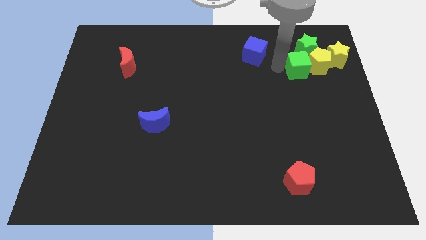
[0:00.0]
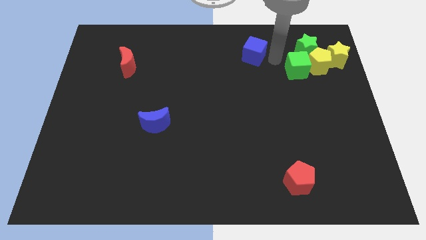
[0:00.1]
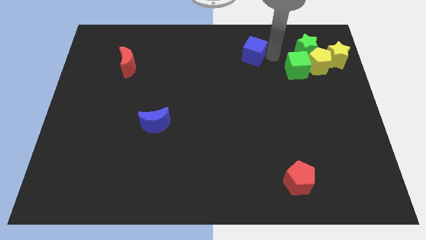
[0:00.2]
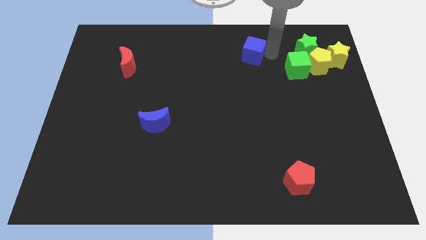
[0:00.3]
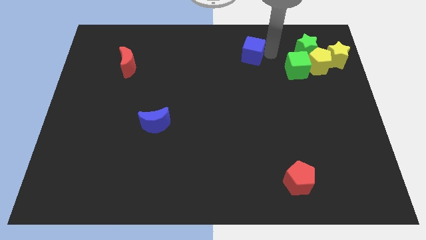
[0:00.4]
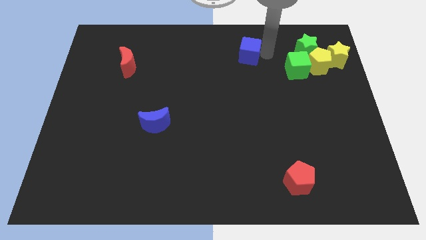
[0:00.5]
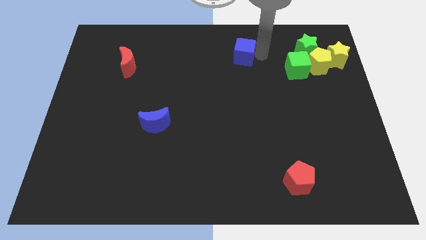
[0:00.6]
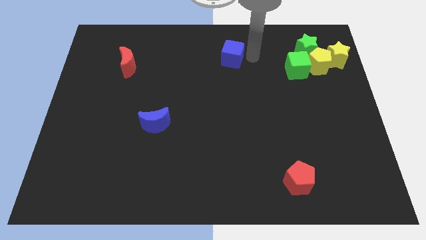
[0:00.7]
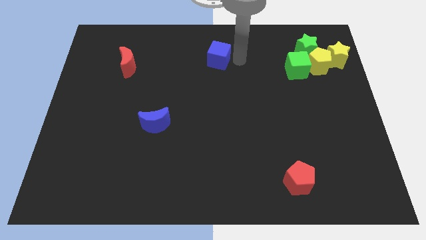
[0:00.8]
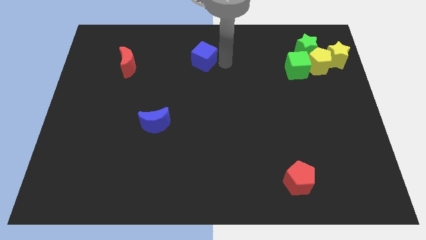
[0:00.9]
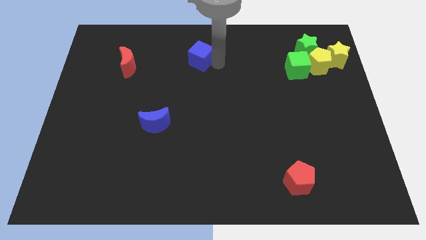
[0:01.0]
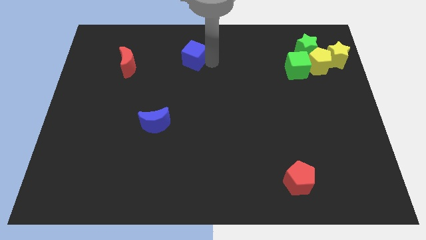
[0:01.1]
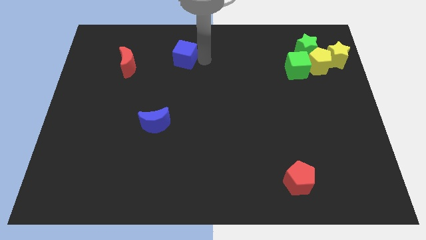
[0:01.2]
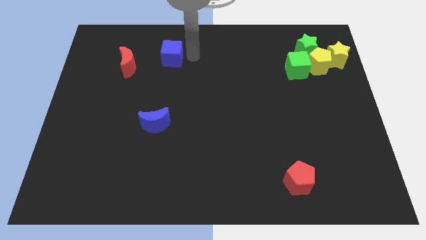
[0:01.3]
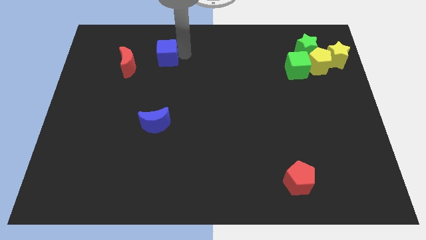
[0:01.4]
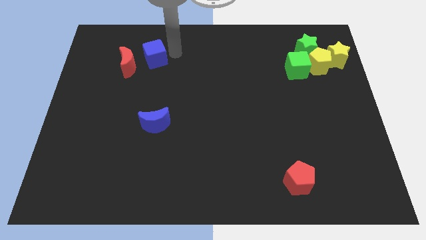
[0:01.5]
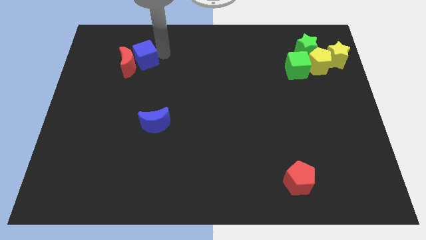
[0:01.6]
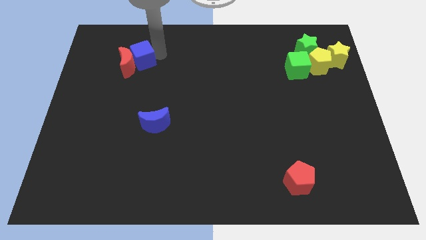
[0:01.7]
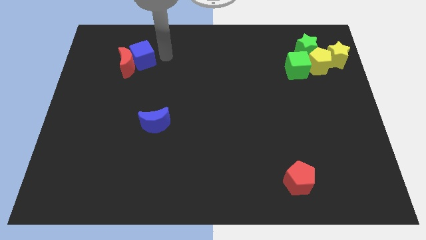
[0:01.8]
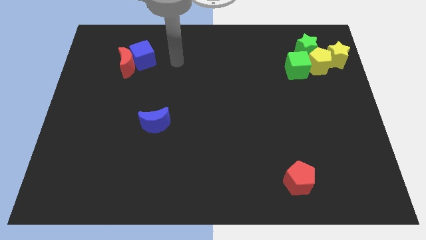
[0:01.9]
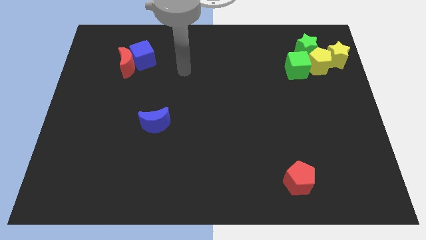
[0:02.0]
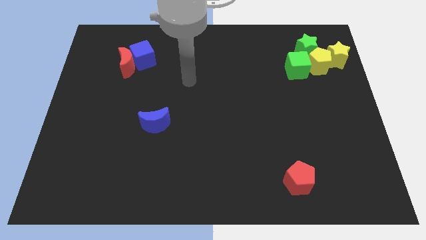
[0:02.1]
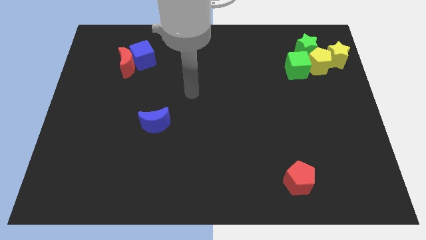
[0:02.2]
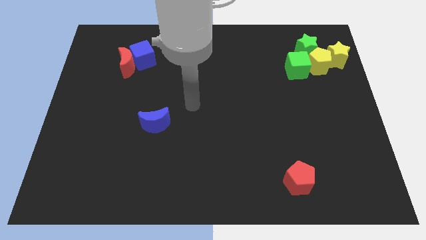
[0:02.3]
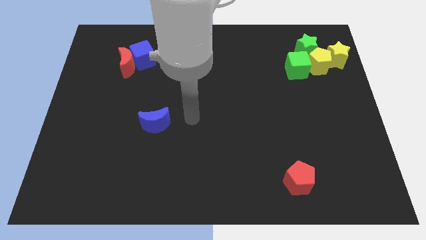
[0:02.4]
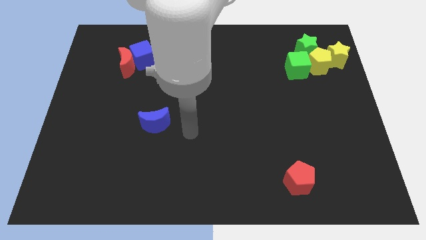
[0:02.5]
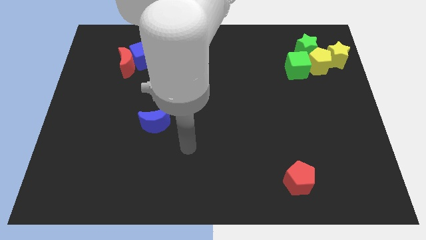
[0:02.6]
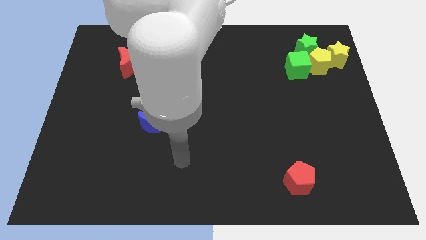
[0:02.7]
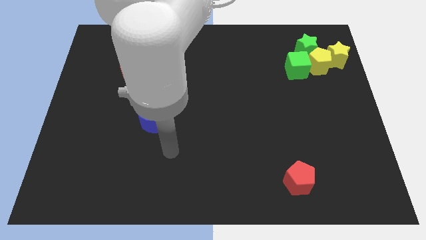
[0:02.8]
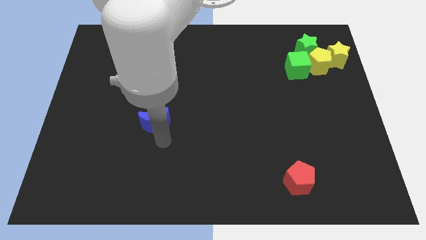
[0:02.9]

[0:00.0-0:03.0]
push the blue cube towards the red moon

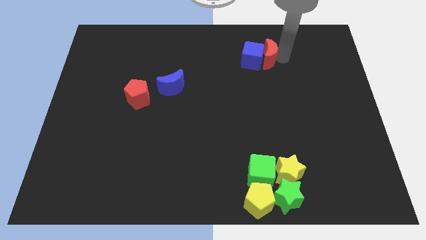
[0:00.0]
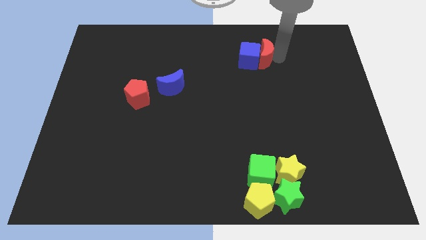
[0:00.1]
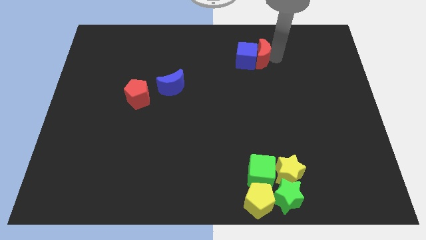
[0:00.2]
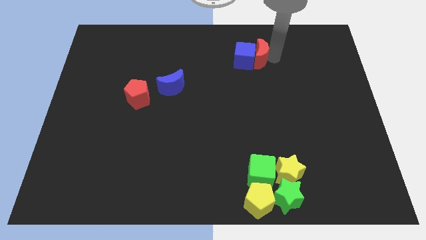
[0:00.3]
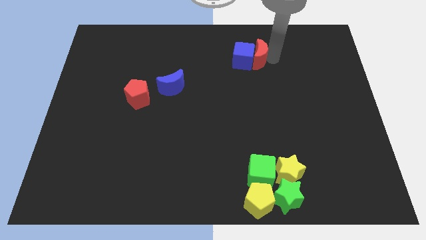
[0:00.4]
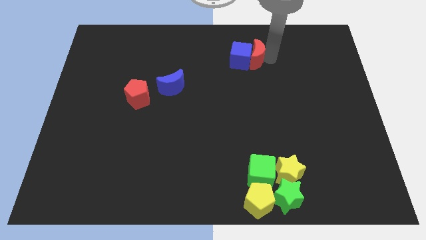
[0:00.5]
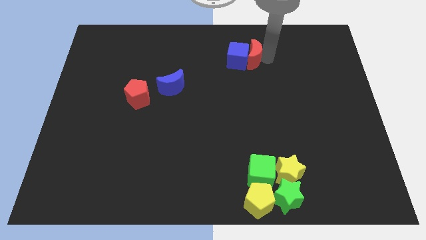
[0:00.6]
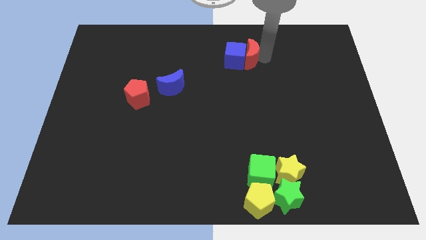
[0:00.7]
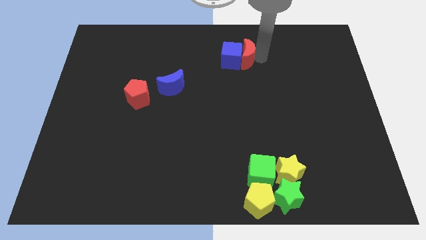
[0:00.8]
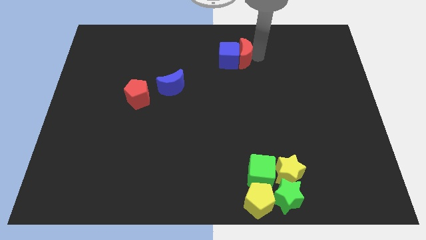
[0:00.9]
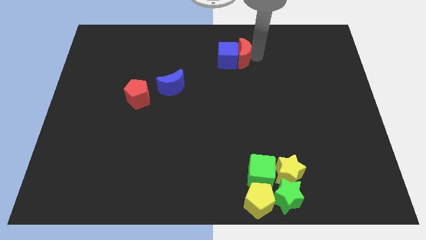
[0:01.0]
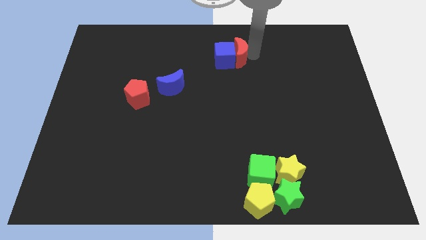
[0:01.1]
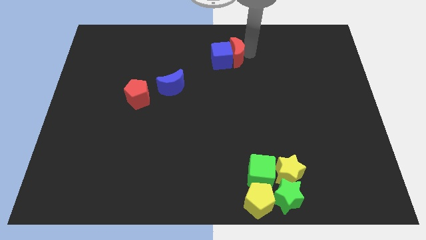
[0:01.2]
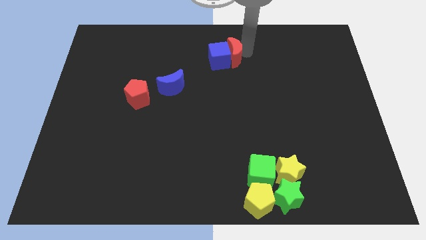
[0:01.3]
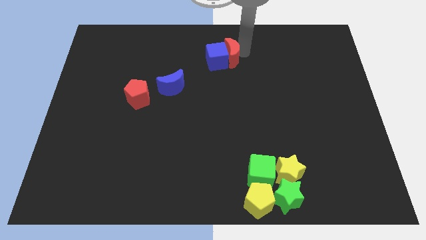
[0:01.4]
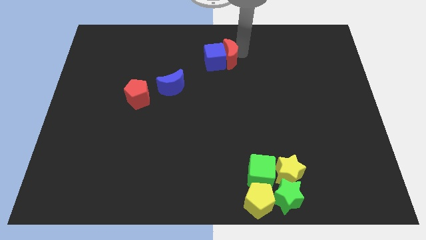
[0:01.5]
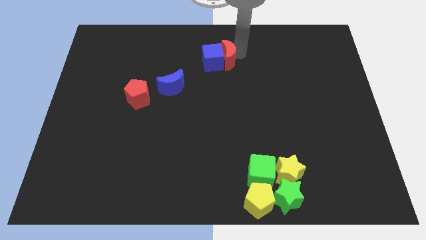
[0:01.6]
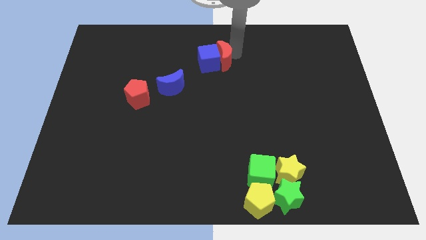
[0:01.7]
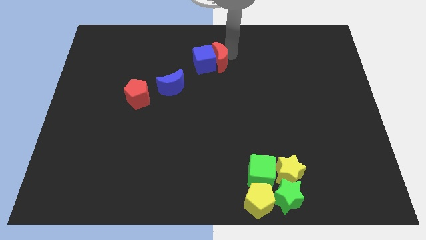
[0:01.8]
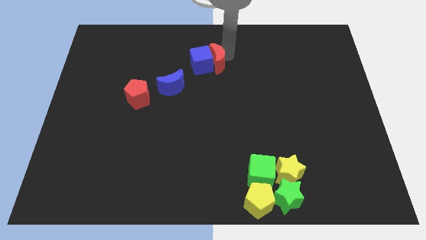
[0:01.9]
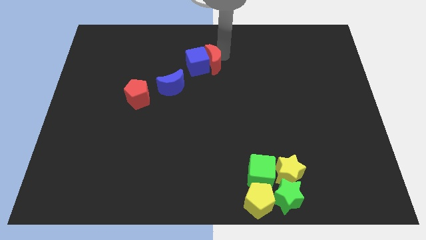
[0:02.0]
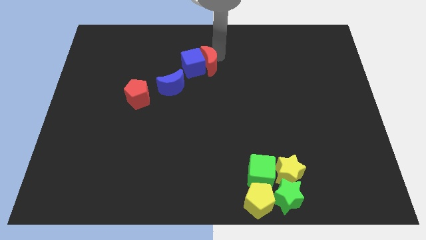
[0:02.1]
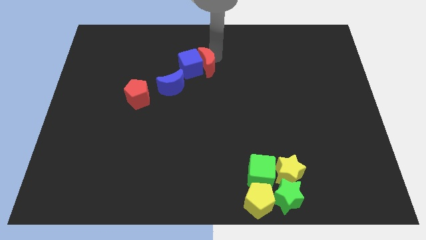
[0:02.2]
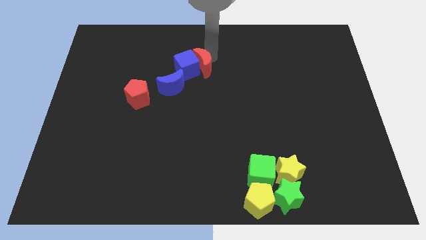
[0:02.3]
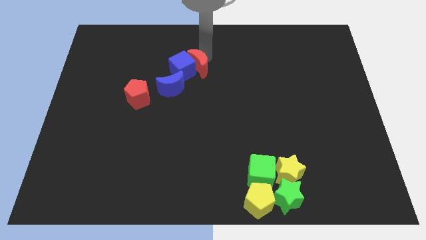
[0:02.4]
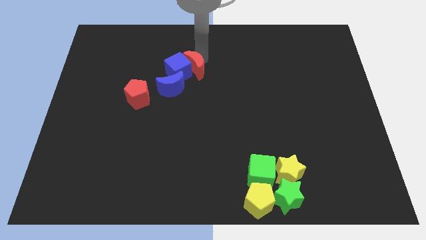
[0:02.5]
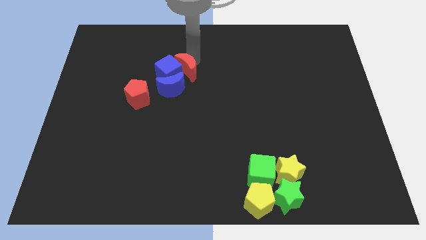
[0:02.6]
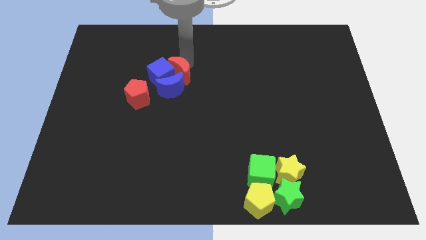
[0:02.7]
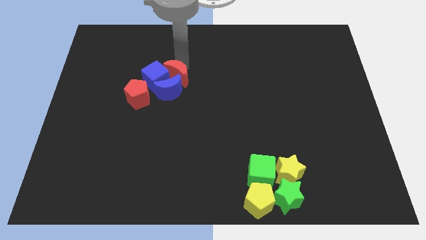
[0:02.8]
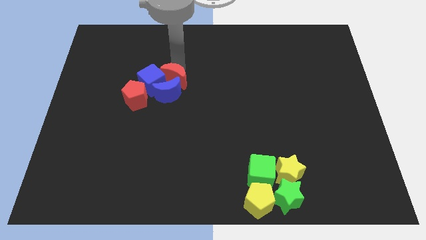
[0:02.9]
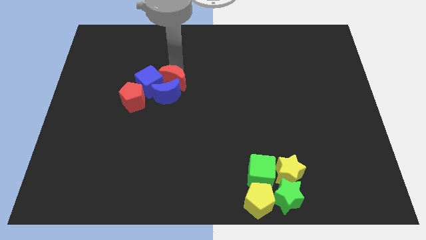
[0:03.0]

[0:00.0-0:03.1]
move the red crescent and blue cube together into the blue crescent

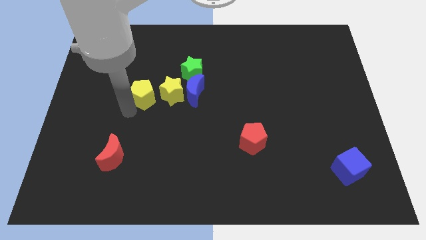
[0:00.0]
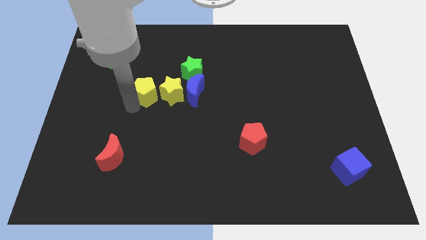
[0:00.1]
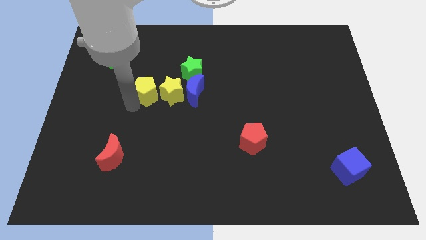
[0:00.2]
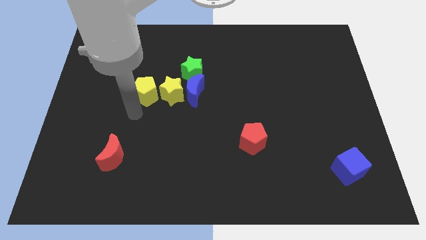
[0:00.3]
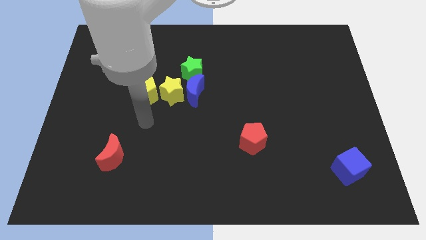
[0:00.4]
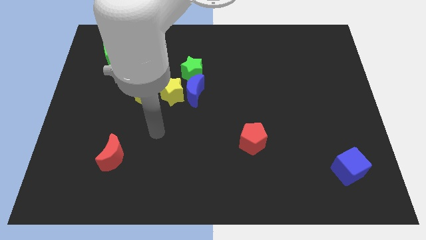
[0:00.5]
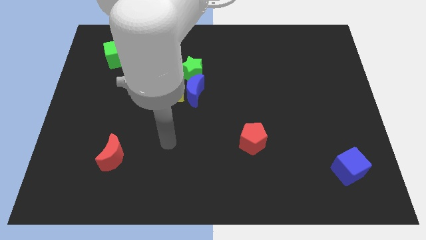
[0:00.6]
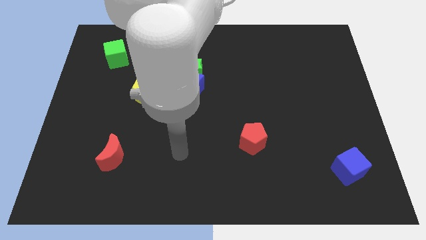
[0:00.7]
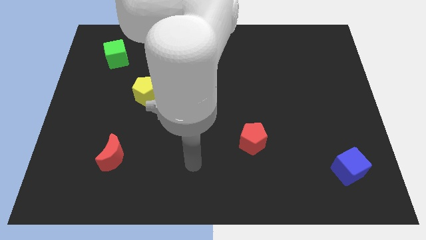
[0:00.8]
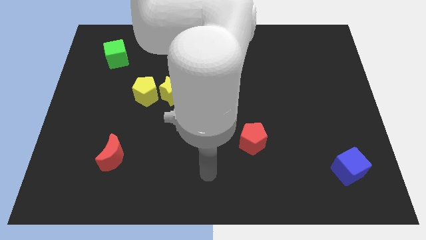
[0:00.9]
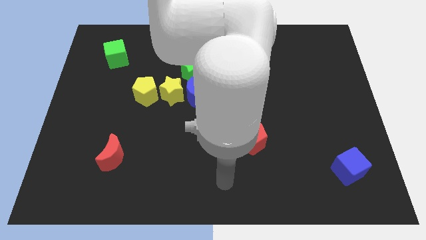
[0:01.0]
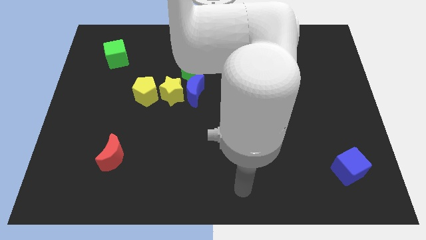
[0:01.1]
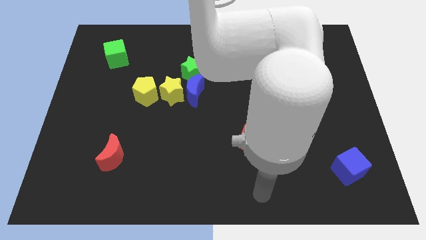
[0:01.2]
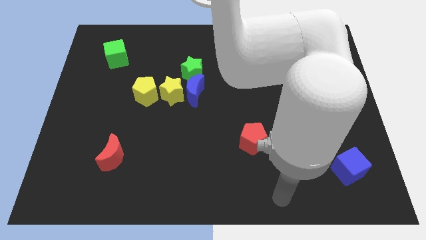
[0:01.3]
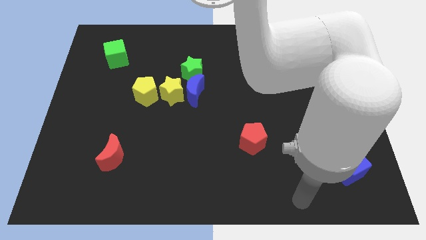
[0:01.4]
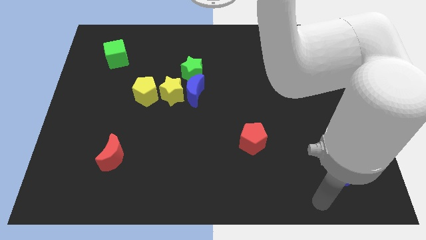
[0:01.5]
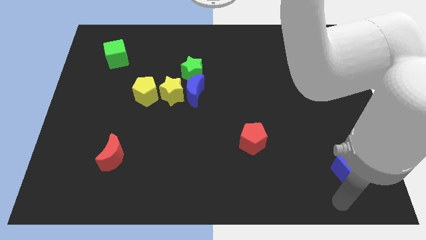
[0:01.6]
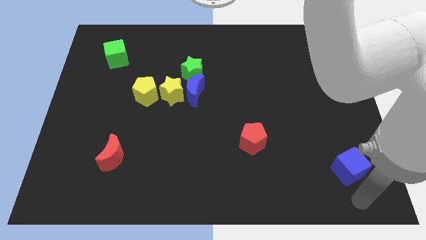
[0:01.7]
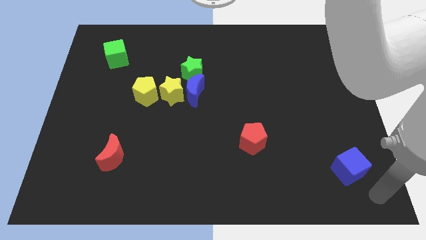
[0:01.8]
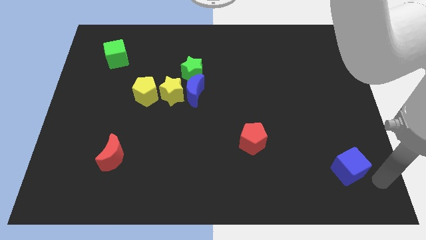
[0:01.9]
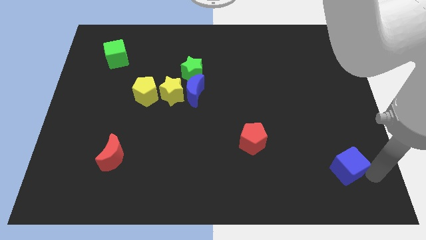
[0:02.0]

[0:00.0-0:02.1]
move your arm away from the yellow pentagon

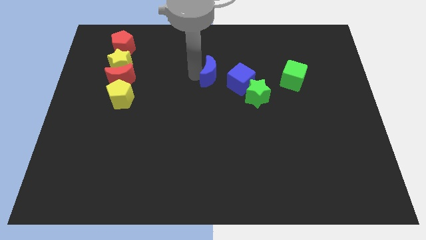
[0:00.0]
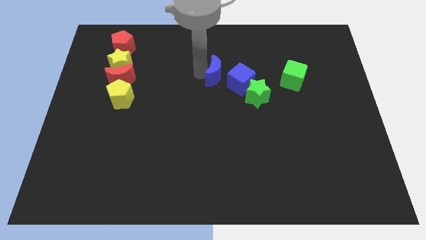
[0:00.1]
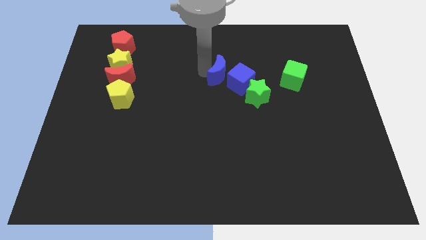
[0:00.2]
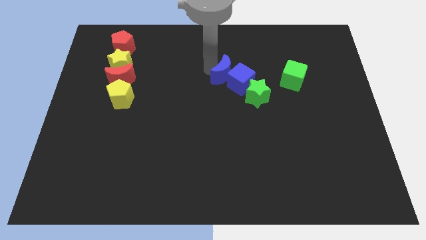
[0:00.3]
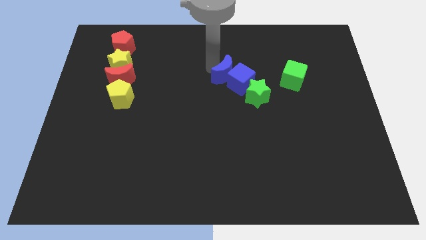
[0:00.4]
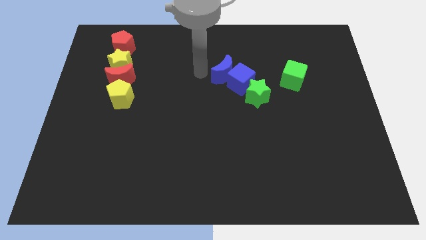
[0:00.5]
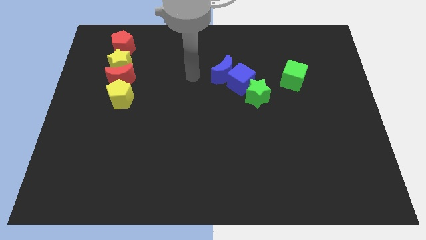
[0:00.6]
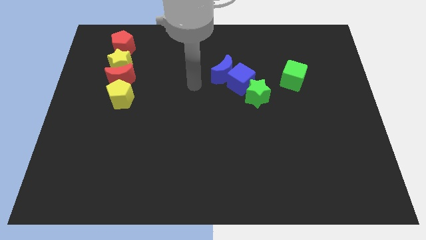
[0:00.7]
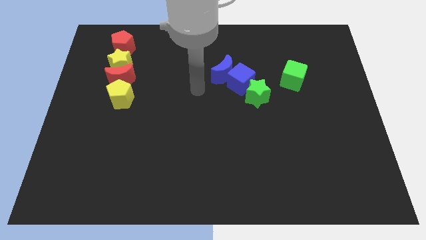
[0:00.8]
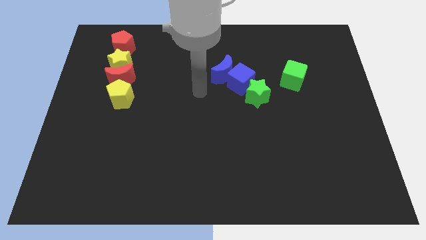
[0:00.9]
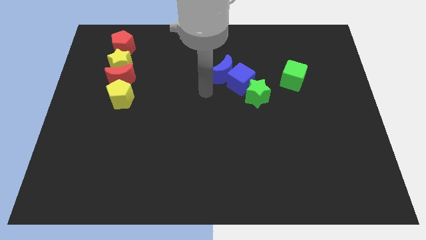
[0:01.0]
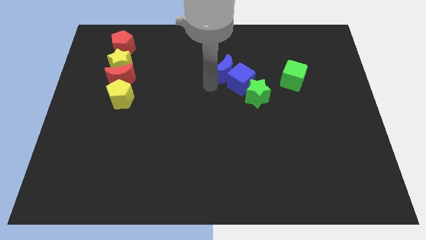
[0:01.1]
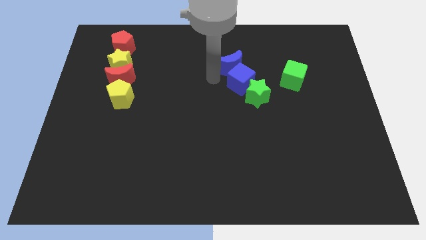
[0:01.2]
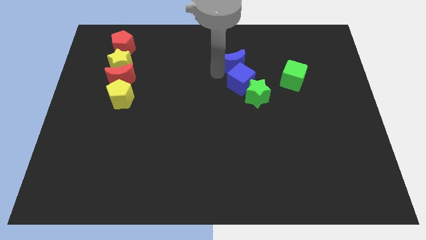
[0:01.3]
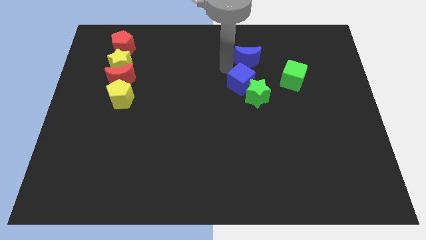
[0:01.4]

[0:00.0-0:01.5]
place the blue moon above the blue cube
